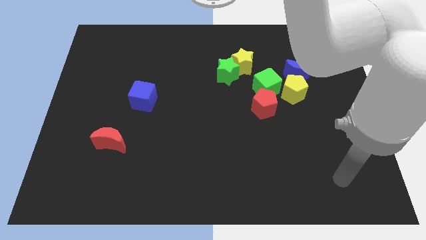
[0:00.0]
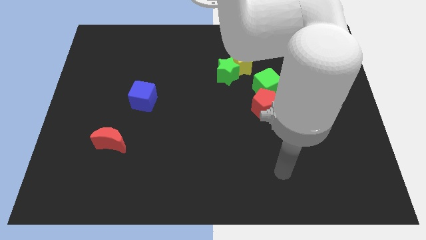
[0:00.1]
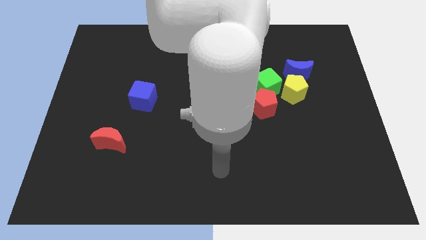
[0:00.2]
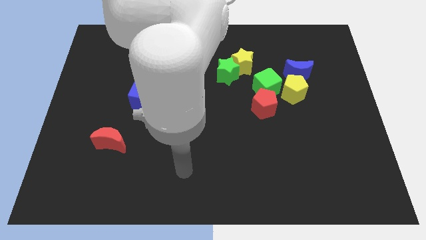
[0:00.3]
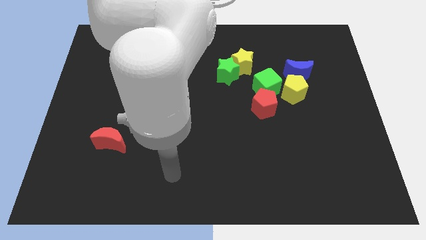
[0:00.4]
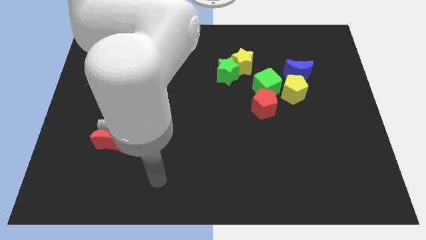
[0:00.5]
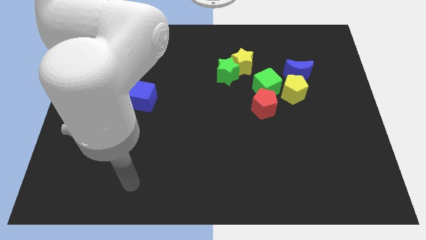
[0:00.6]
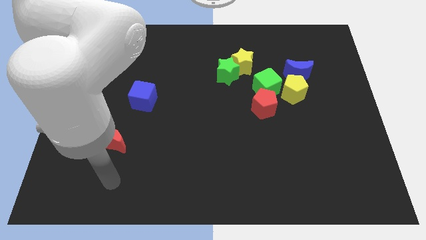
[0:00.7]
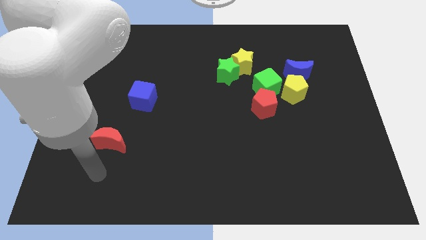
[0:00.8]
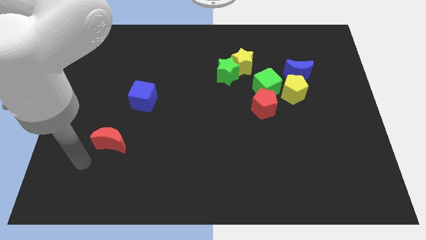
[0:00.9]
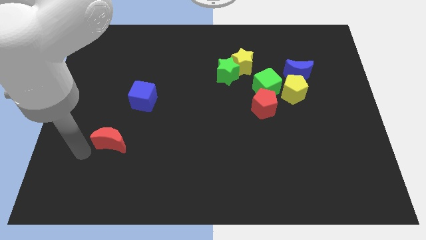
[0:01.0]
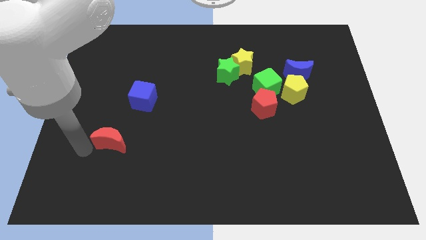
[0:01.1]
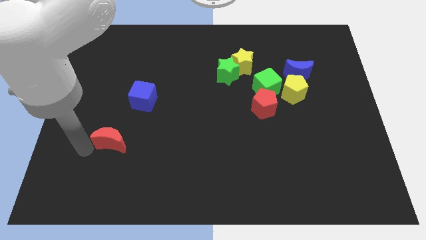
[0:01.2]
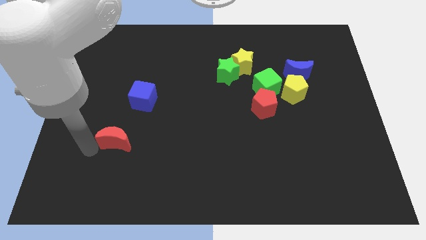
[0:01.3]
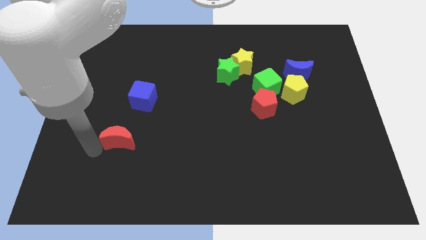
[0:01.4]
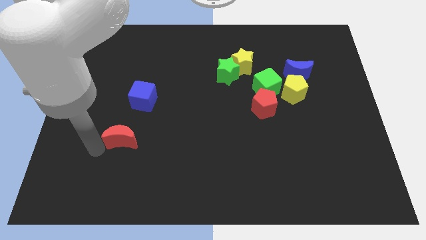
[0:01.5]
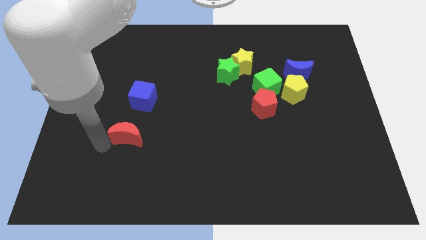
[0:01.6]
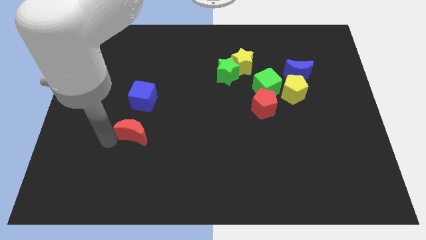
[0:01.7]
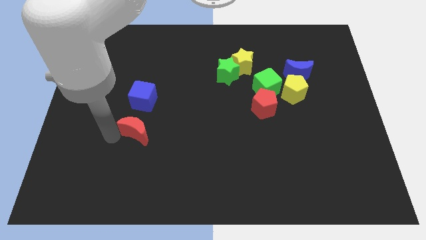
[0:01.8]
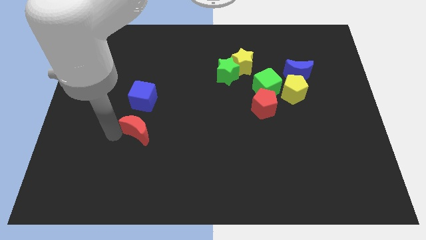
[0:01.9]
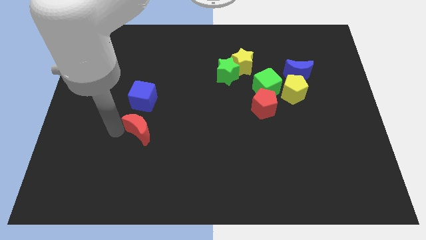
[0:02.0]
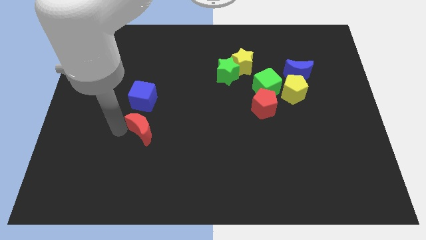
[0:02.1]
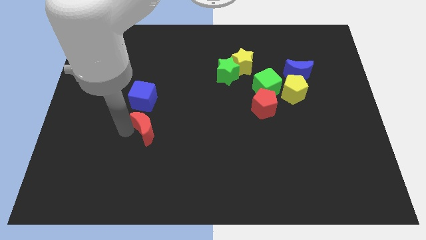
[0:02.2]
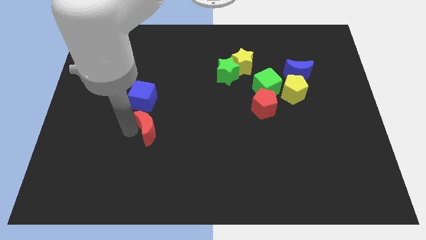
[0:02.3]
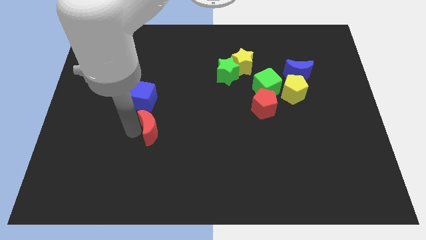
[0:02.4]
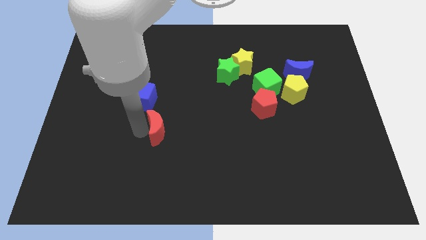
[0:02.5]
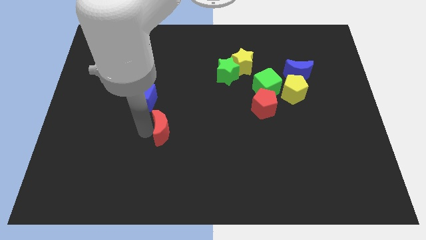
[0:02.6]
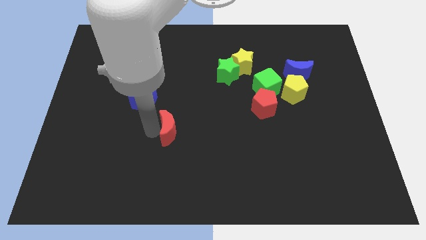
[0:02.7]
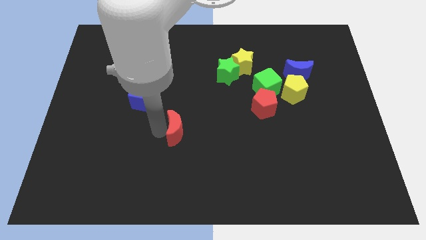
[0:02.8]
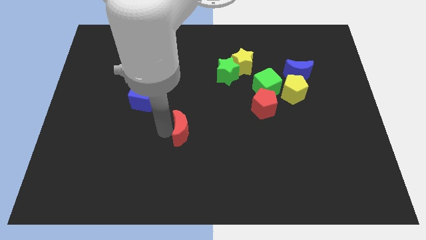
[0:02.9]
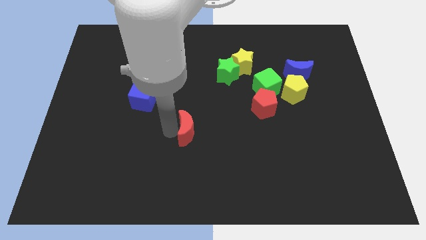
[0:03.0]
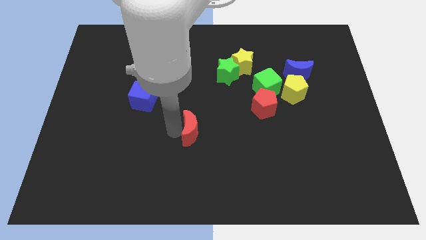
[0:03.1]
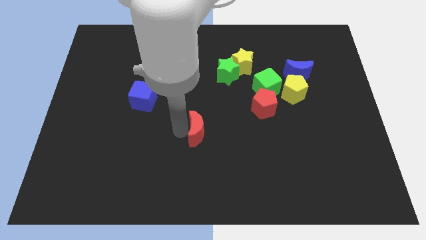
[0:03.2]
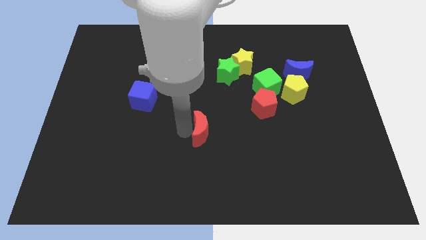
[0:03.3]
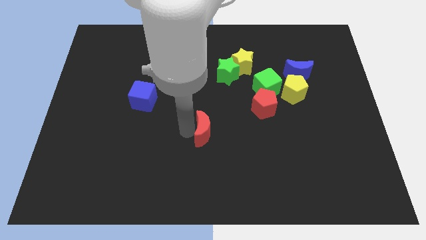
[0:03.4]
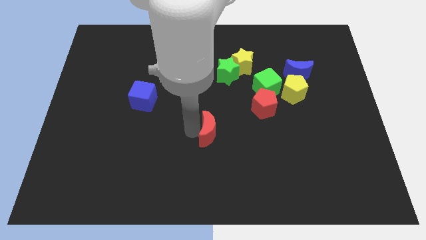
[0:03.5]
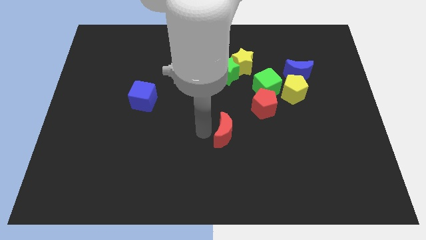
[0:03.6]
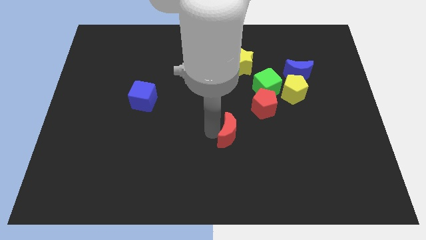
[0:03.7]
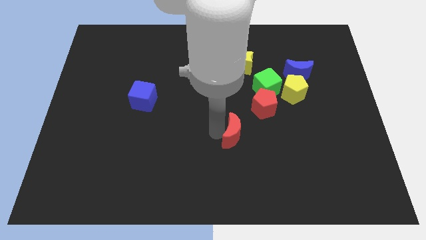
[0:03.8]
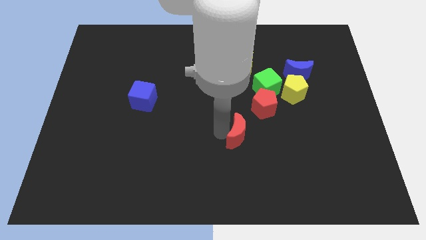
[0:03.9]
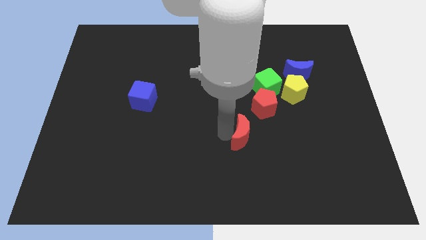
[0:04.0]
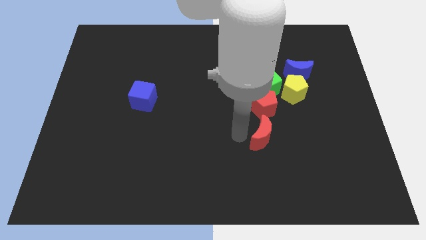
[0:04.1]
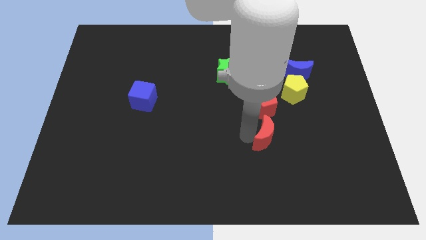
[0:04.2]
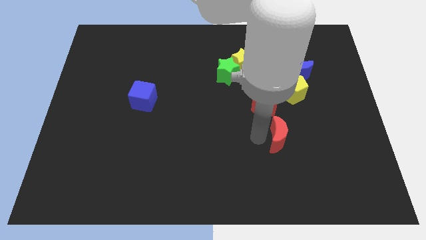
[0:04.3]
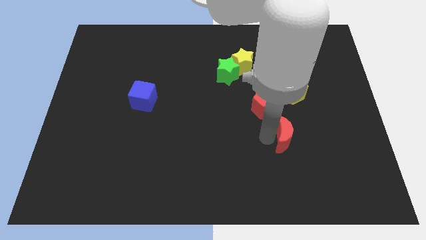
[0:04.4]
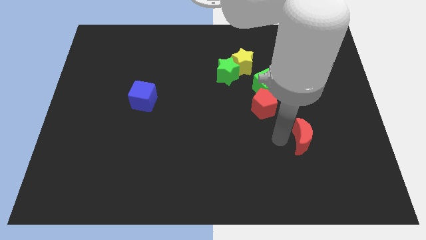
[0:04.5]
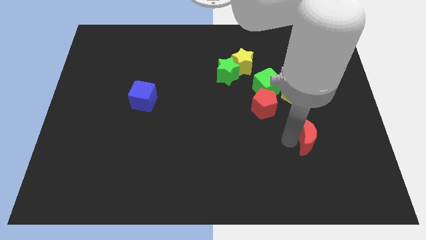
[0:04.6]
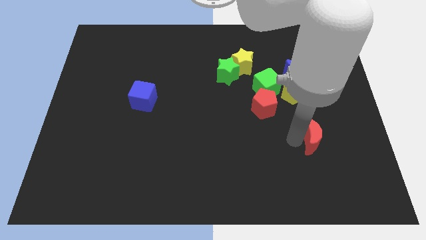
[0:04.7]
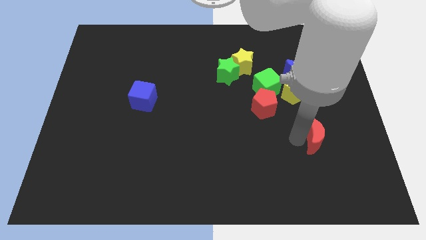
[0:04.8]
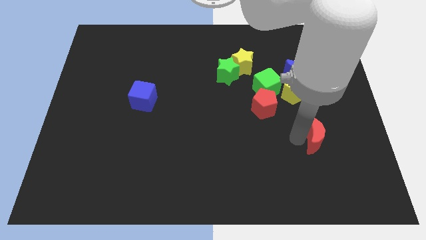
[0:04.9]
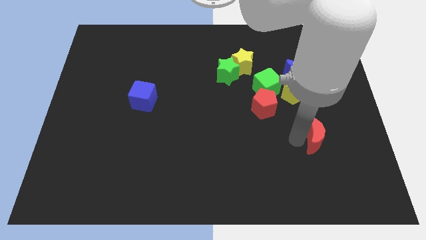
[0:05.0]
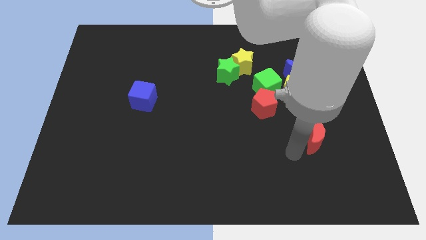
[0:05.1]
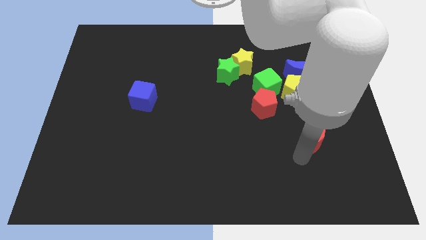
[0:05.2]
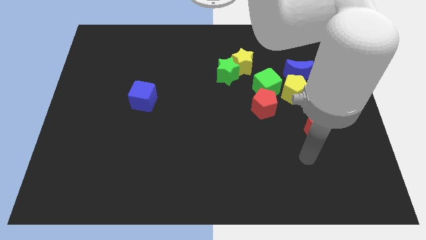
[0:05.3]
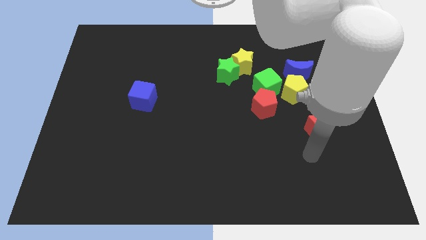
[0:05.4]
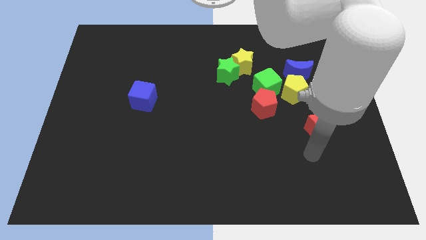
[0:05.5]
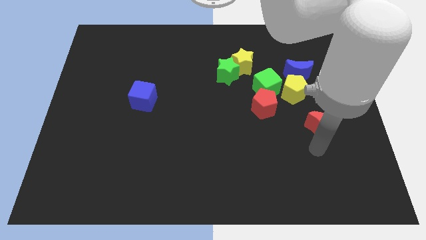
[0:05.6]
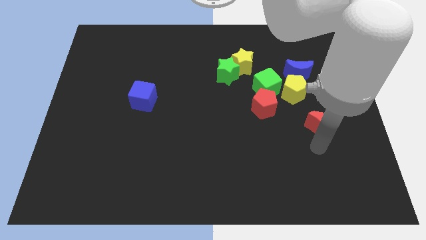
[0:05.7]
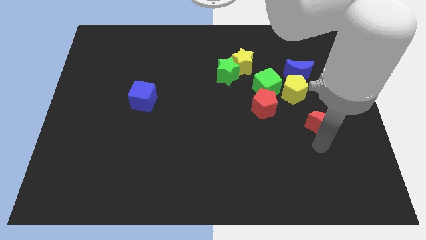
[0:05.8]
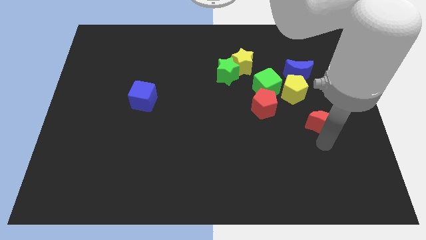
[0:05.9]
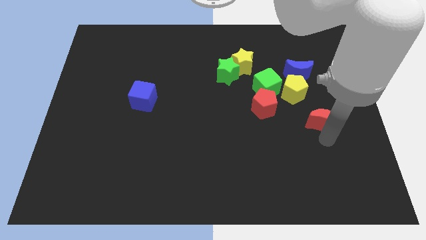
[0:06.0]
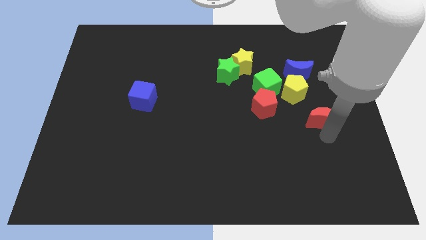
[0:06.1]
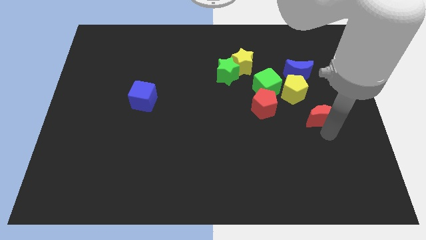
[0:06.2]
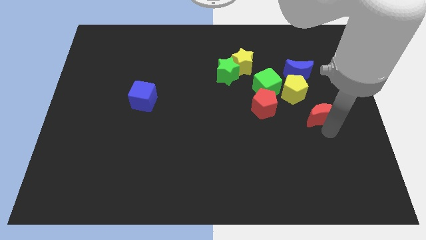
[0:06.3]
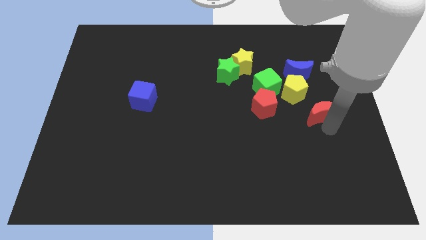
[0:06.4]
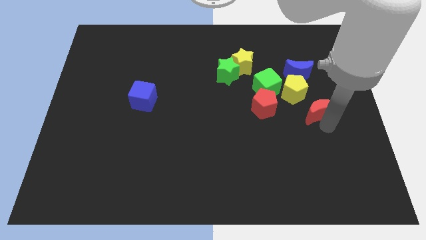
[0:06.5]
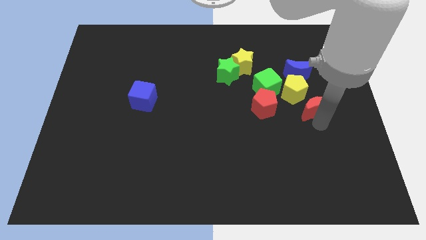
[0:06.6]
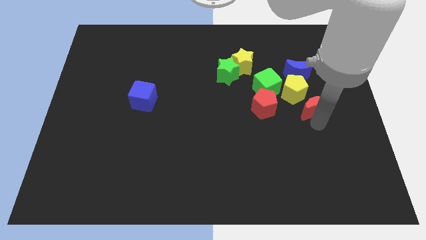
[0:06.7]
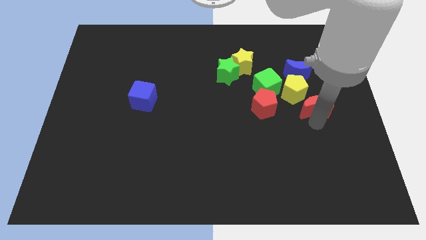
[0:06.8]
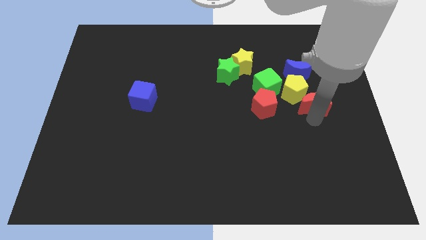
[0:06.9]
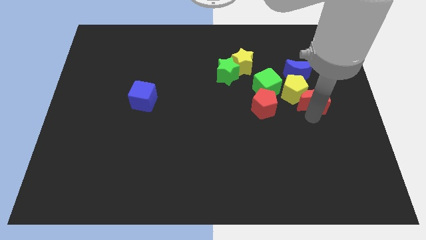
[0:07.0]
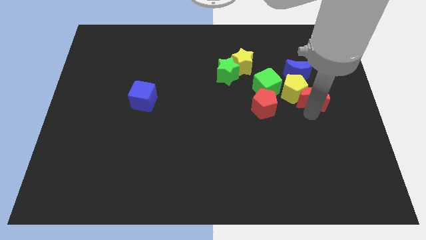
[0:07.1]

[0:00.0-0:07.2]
move the red moon to the yellow pentagon

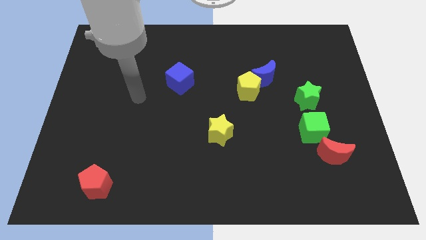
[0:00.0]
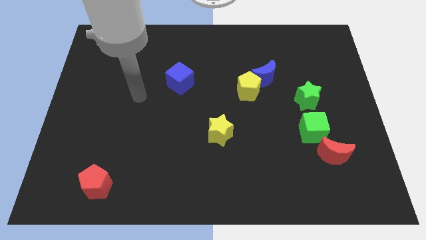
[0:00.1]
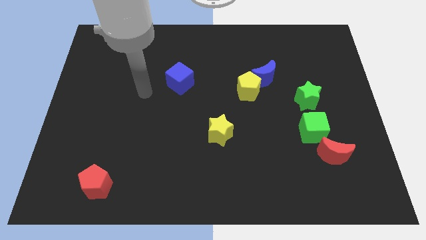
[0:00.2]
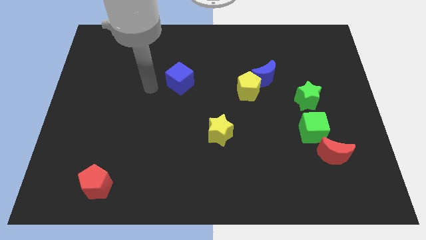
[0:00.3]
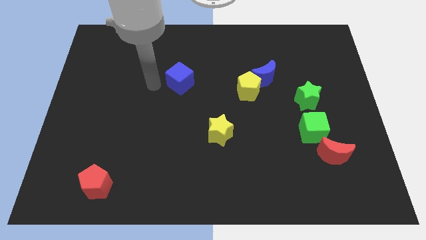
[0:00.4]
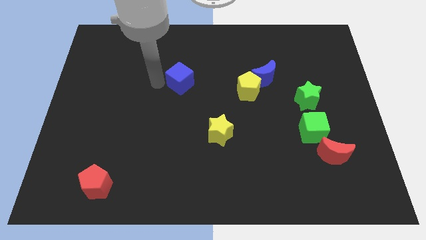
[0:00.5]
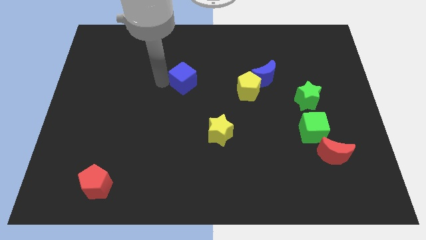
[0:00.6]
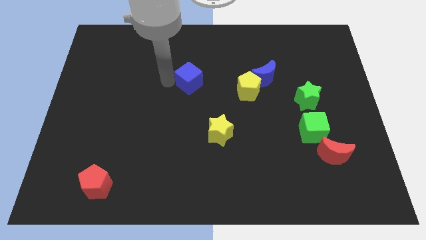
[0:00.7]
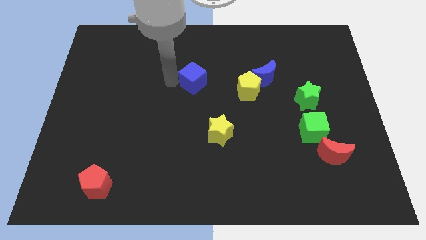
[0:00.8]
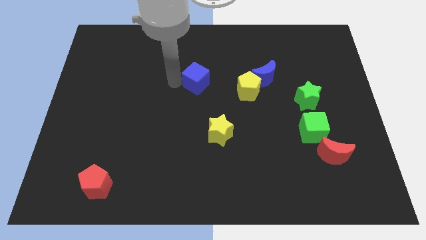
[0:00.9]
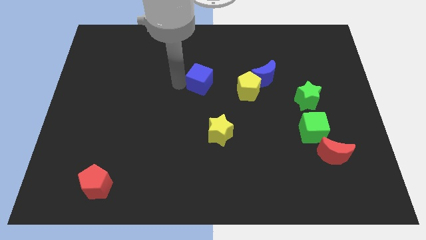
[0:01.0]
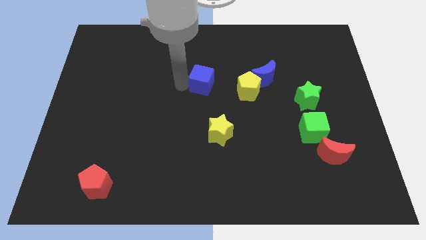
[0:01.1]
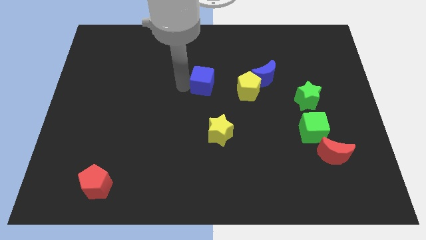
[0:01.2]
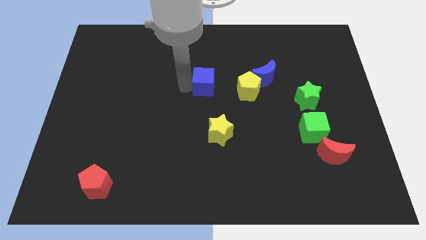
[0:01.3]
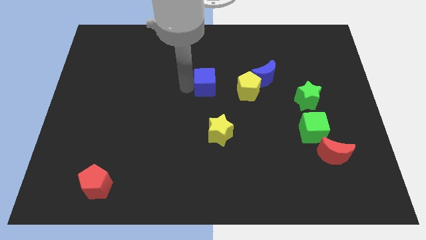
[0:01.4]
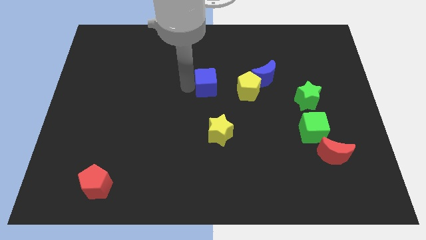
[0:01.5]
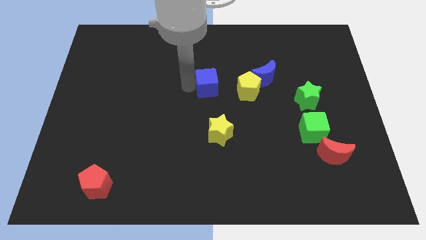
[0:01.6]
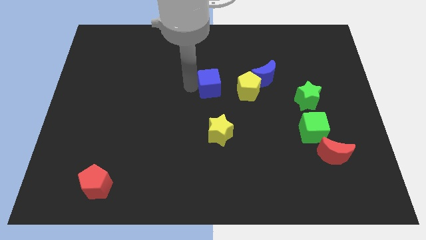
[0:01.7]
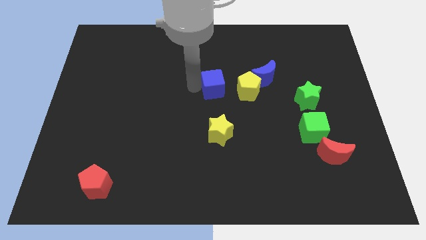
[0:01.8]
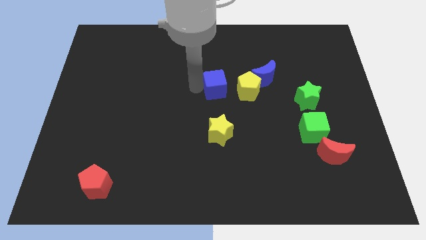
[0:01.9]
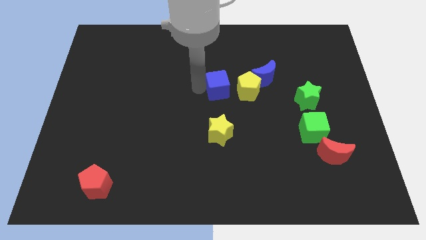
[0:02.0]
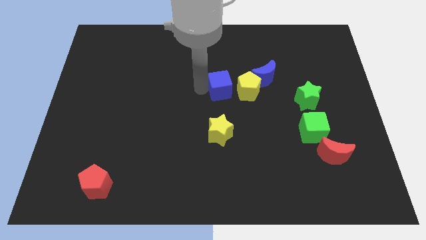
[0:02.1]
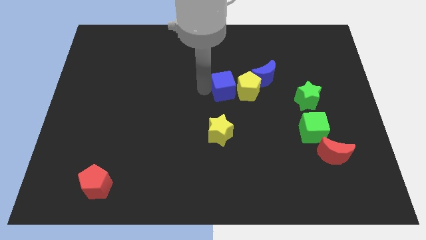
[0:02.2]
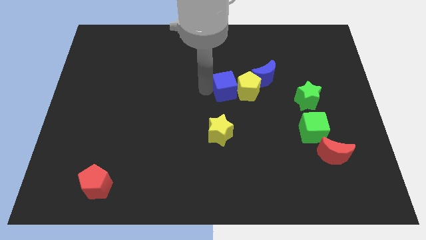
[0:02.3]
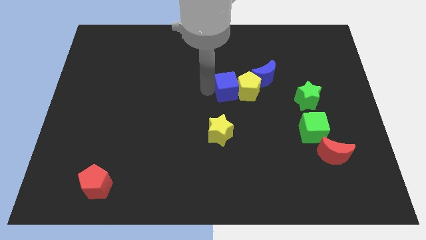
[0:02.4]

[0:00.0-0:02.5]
put the blue cube to the yellow pentagon
